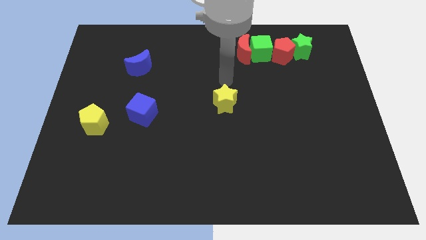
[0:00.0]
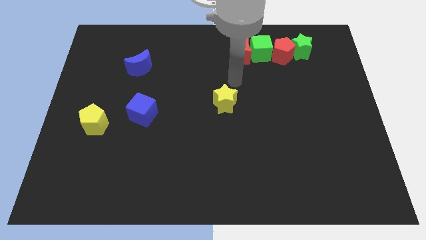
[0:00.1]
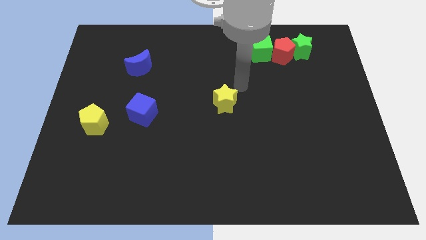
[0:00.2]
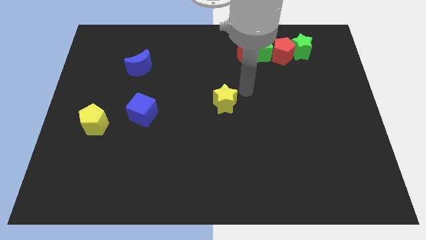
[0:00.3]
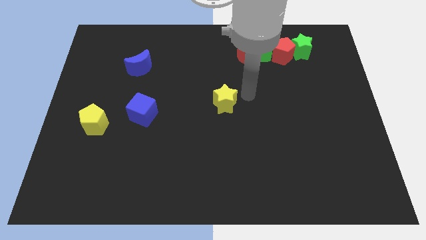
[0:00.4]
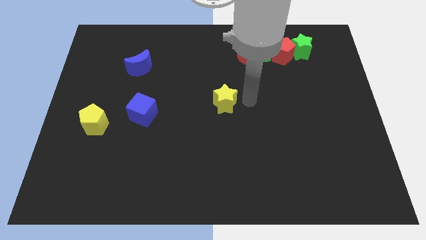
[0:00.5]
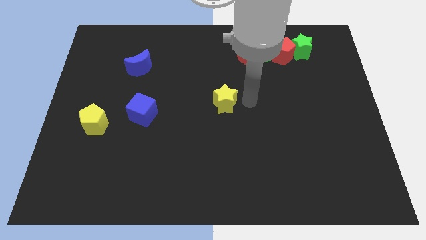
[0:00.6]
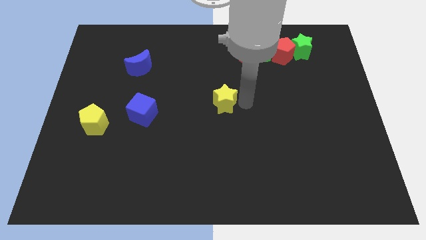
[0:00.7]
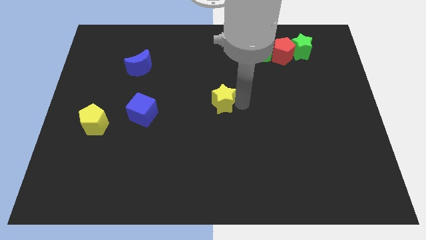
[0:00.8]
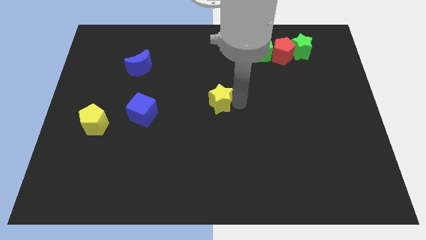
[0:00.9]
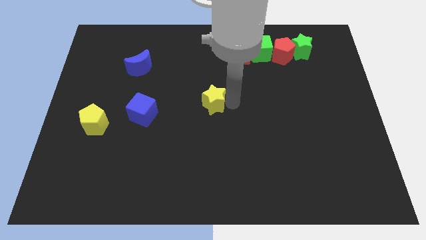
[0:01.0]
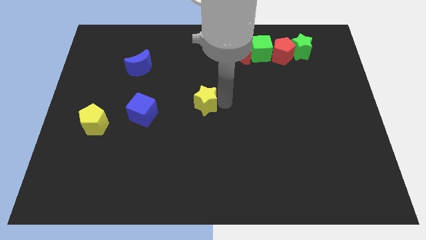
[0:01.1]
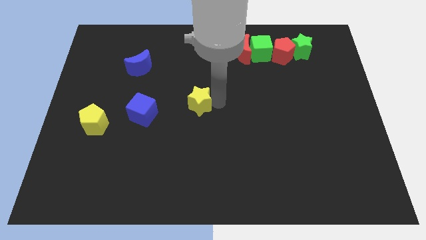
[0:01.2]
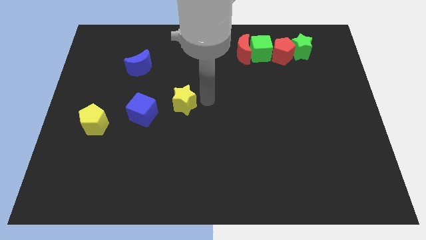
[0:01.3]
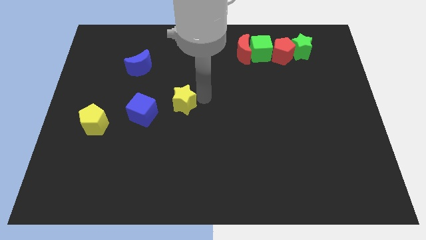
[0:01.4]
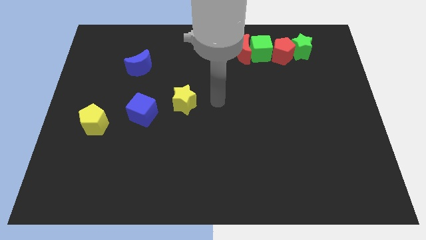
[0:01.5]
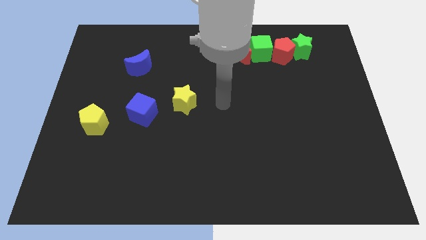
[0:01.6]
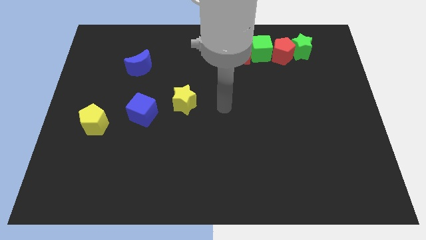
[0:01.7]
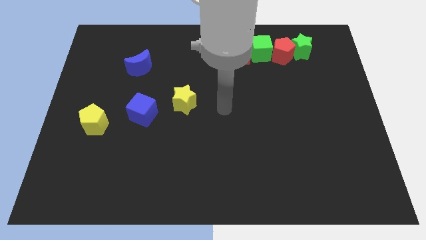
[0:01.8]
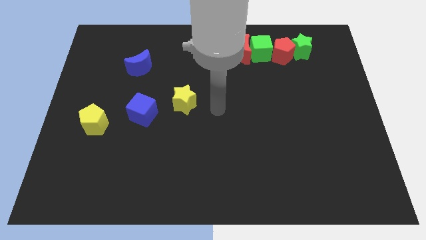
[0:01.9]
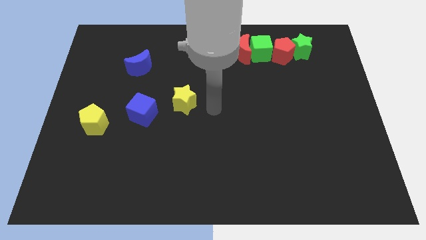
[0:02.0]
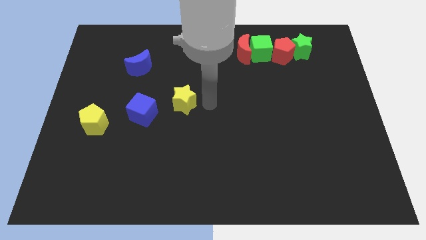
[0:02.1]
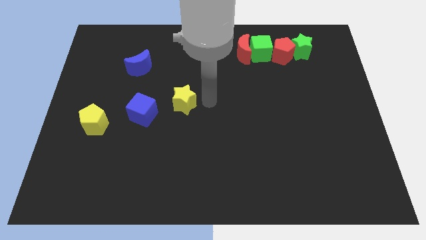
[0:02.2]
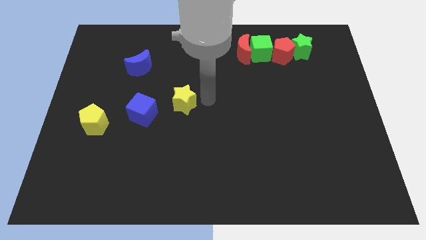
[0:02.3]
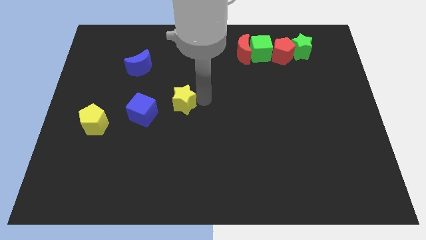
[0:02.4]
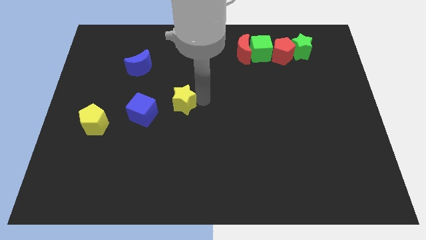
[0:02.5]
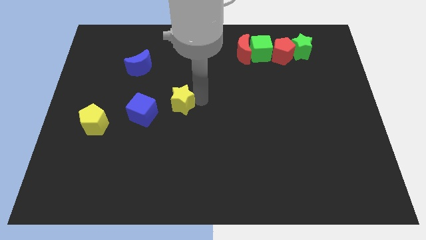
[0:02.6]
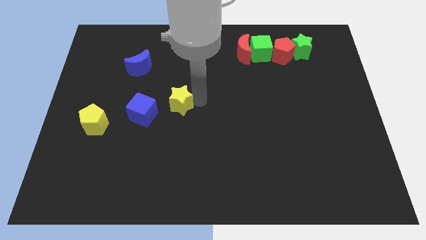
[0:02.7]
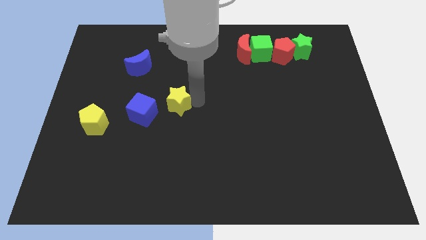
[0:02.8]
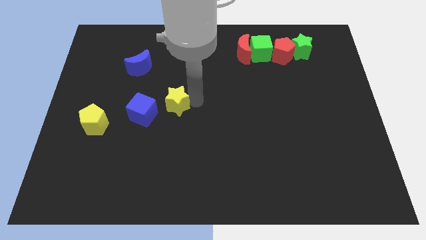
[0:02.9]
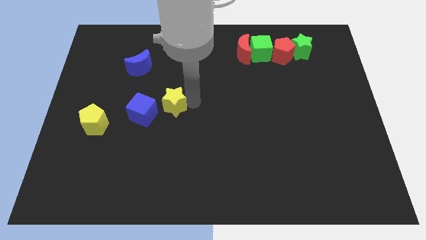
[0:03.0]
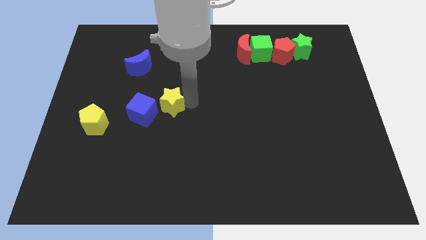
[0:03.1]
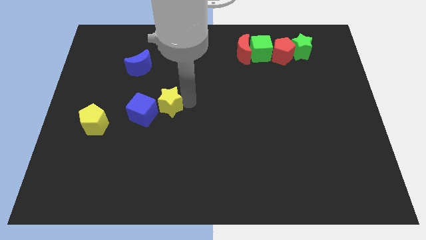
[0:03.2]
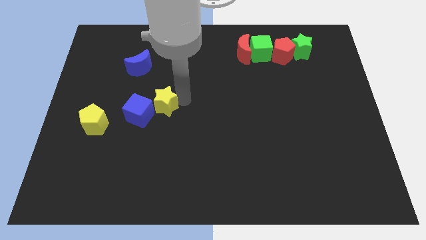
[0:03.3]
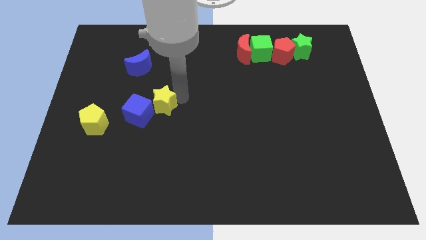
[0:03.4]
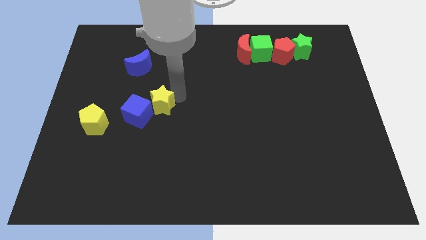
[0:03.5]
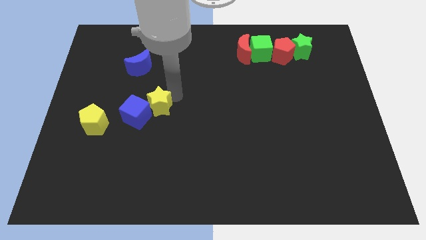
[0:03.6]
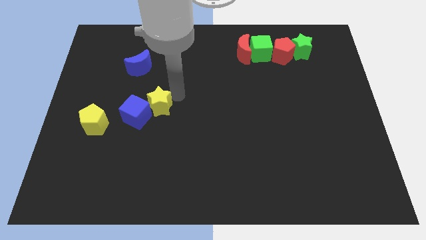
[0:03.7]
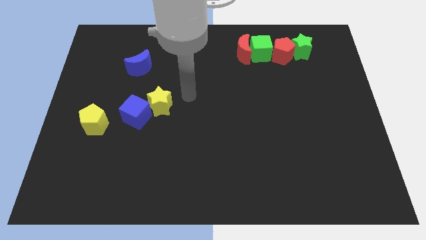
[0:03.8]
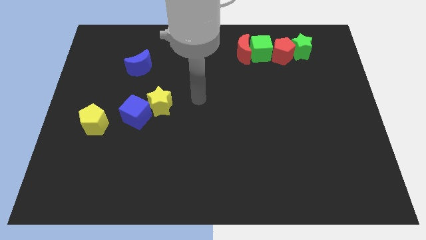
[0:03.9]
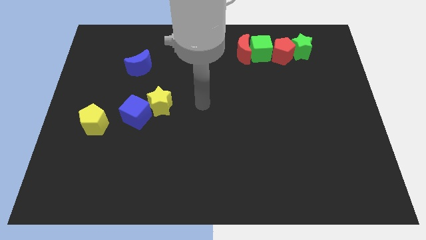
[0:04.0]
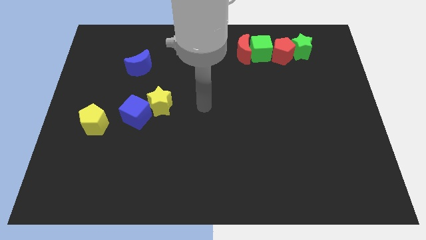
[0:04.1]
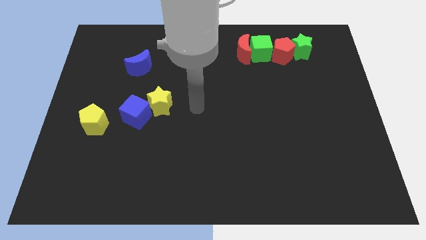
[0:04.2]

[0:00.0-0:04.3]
push the yellow star into the blue cube

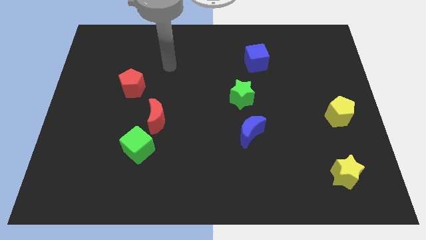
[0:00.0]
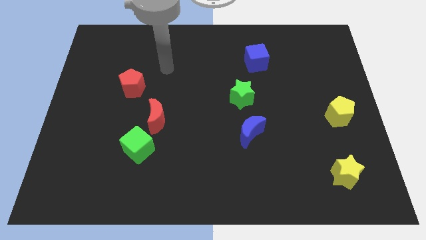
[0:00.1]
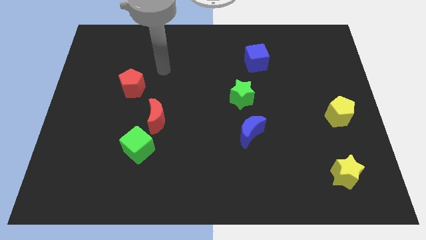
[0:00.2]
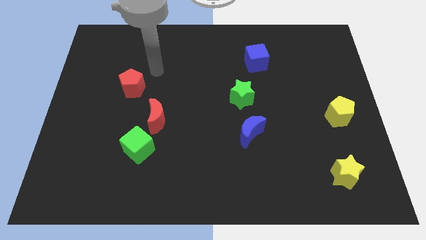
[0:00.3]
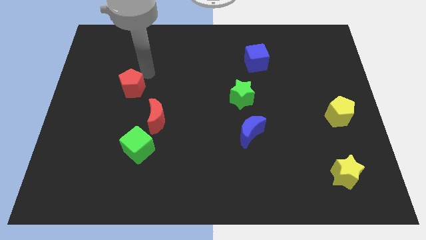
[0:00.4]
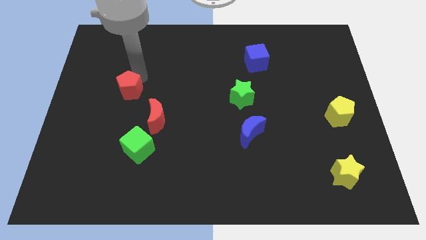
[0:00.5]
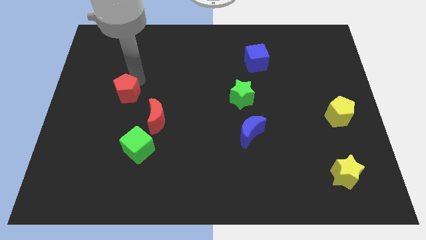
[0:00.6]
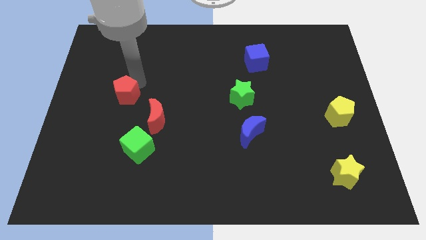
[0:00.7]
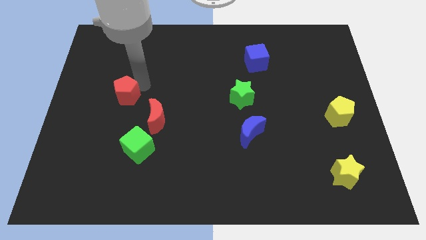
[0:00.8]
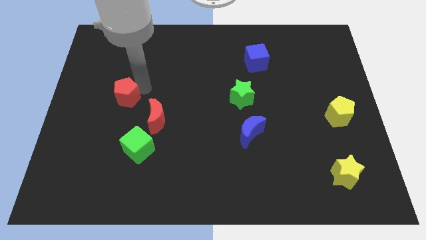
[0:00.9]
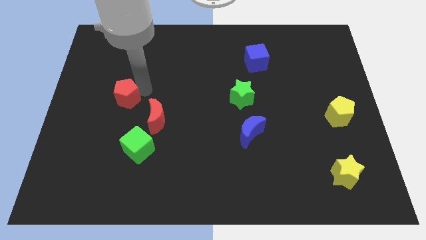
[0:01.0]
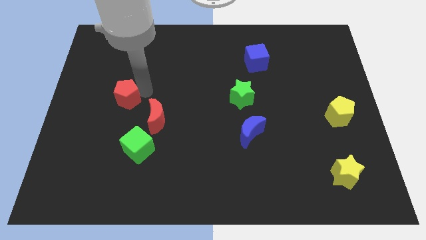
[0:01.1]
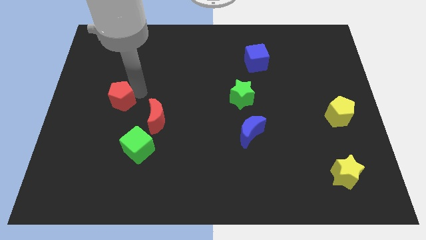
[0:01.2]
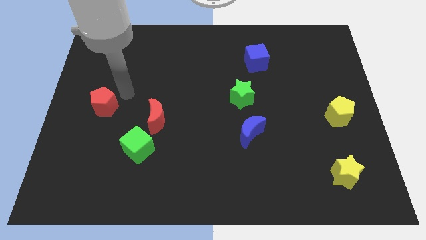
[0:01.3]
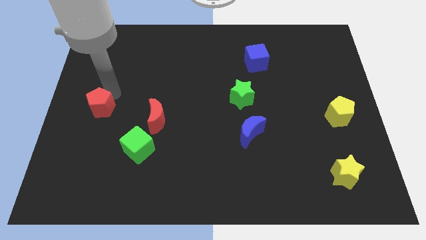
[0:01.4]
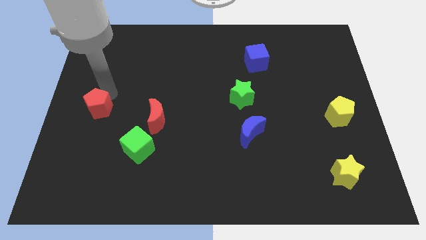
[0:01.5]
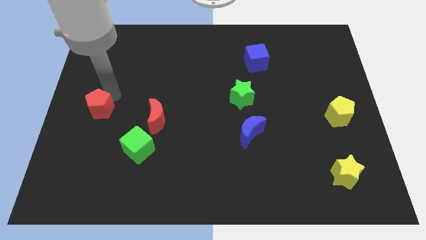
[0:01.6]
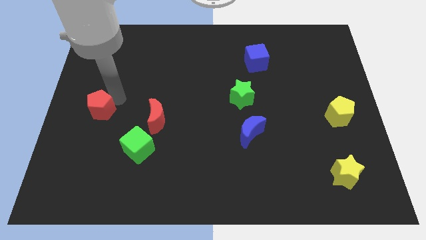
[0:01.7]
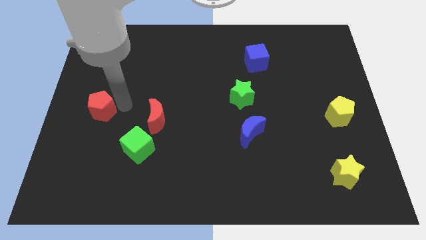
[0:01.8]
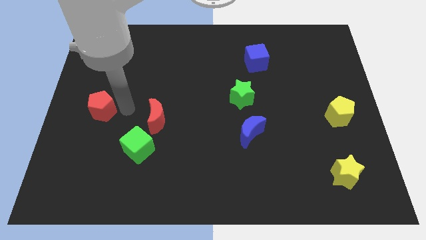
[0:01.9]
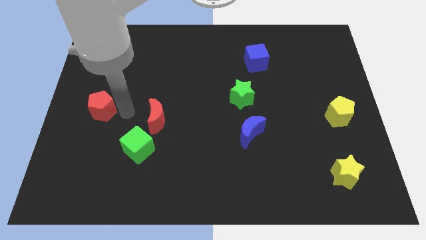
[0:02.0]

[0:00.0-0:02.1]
move the red pentagon to the center left

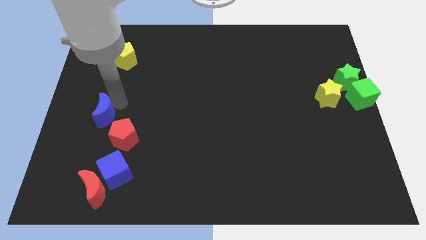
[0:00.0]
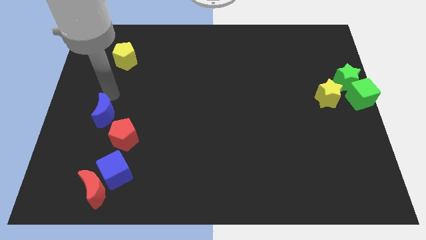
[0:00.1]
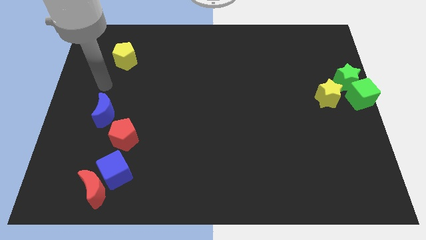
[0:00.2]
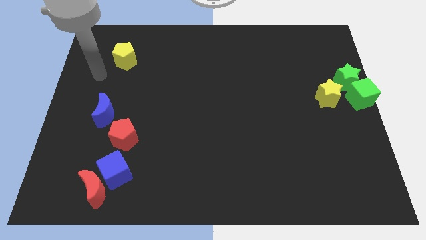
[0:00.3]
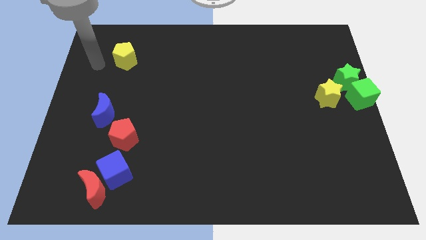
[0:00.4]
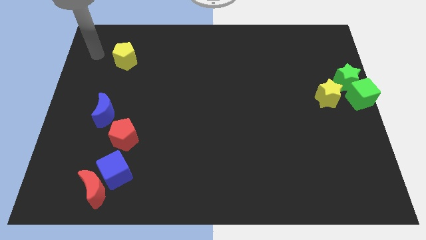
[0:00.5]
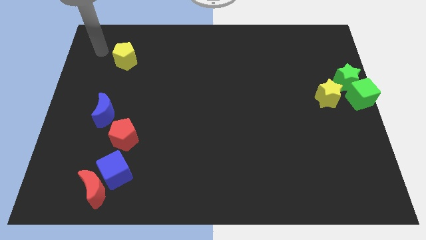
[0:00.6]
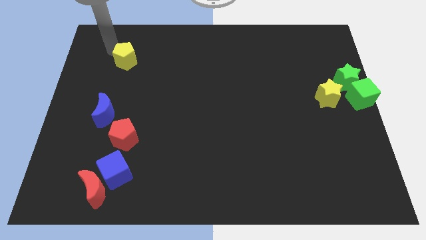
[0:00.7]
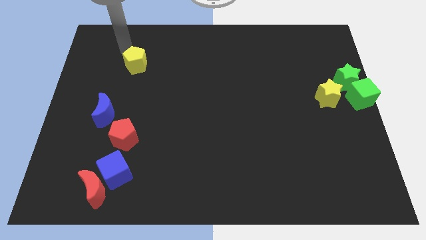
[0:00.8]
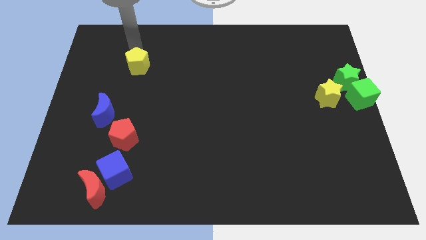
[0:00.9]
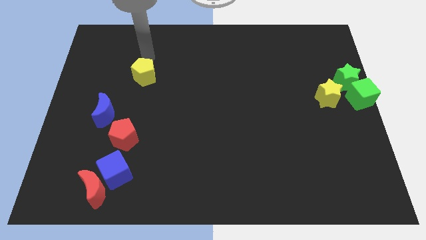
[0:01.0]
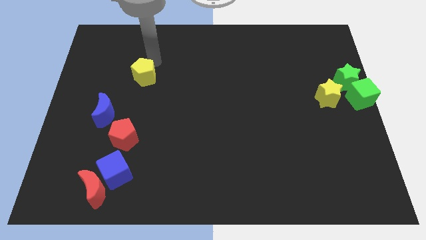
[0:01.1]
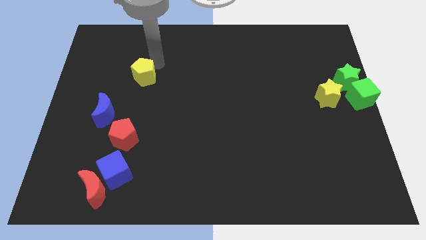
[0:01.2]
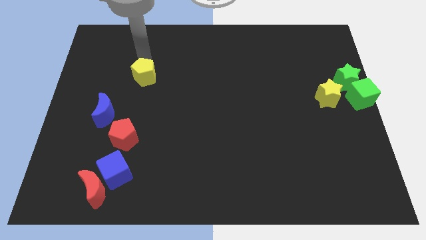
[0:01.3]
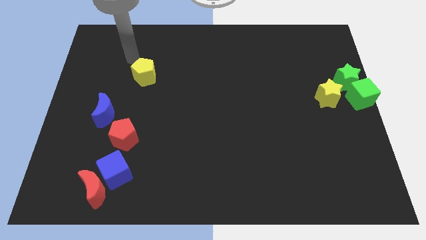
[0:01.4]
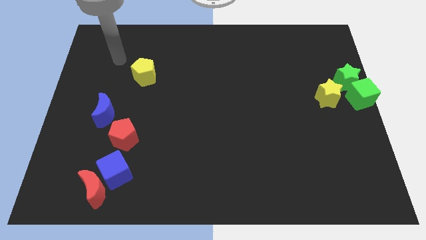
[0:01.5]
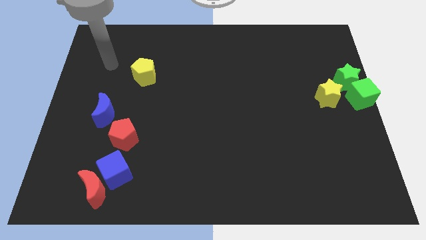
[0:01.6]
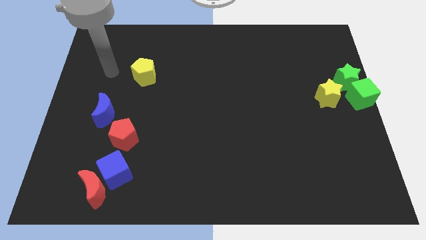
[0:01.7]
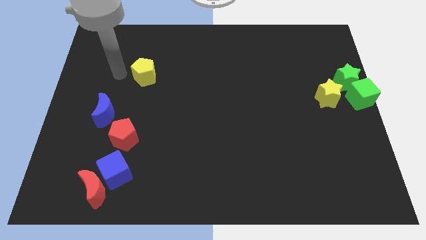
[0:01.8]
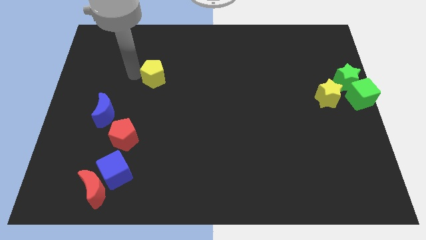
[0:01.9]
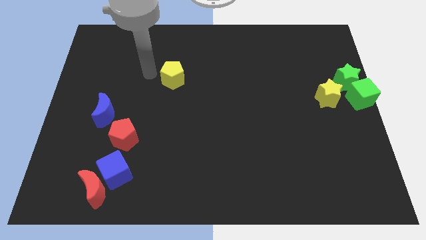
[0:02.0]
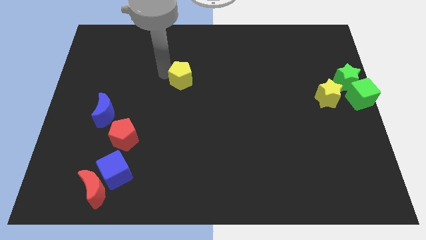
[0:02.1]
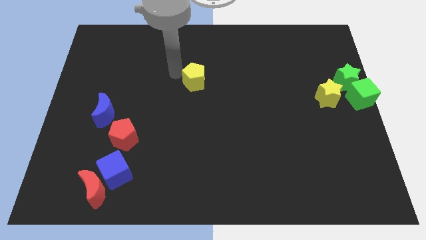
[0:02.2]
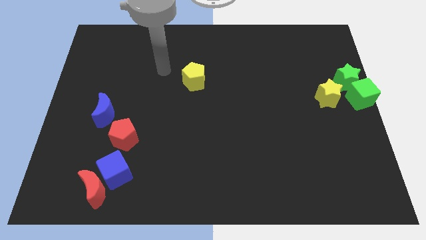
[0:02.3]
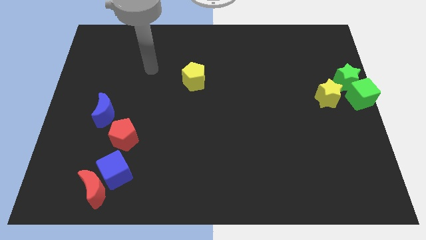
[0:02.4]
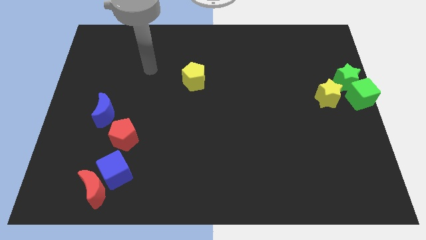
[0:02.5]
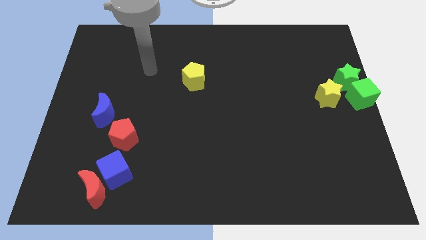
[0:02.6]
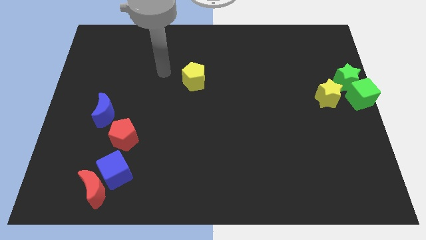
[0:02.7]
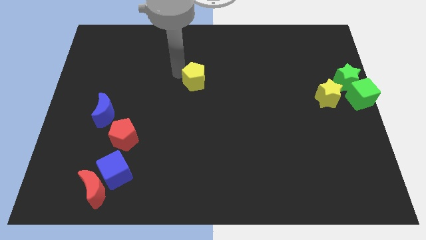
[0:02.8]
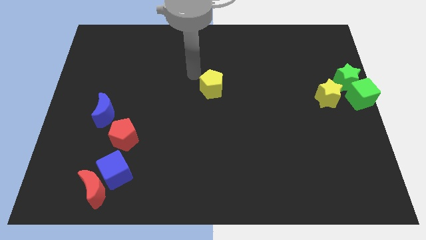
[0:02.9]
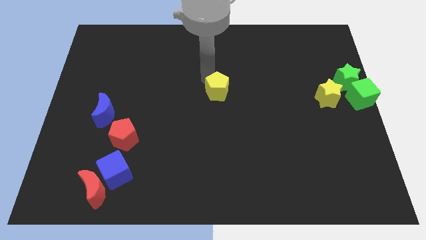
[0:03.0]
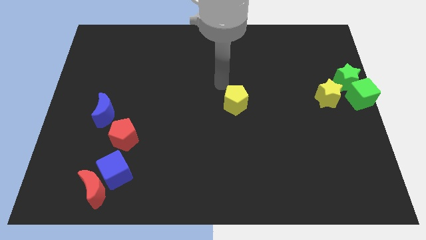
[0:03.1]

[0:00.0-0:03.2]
push the yellow pentagon towards the center of the board
